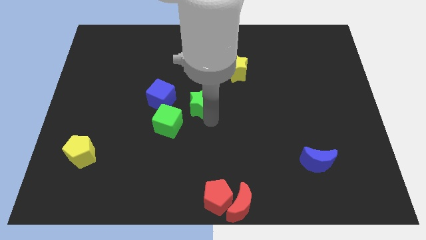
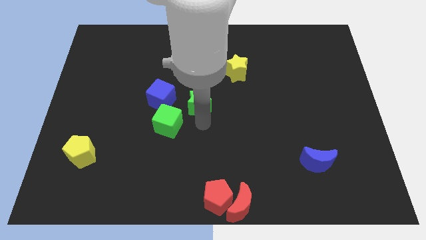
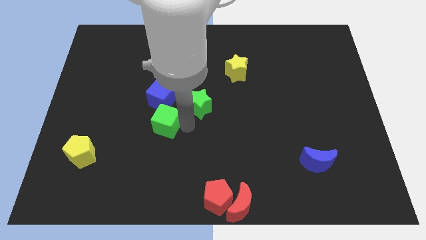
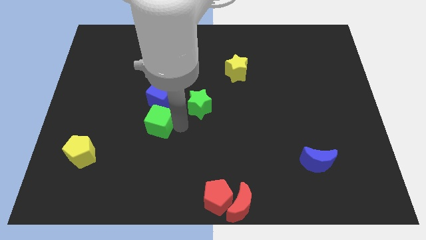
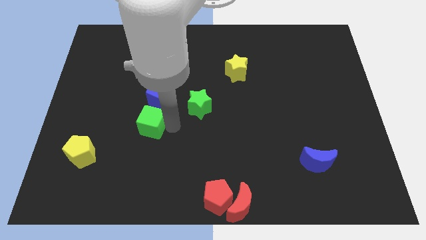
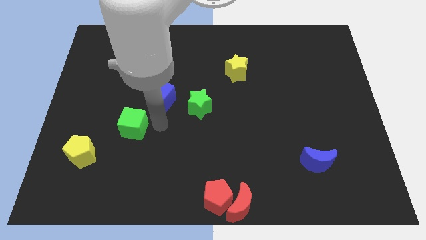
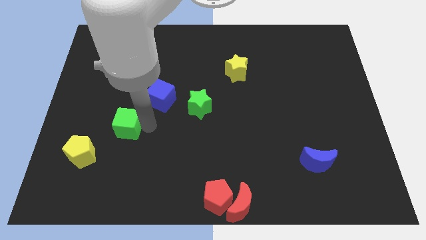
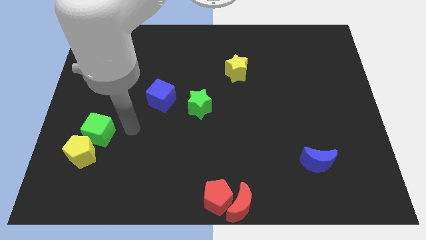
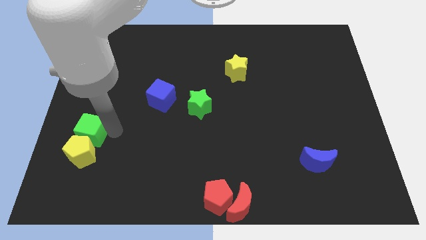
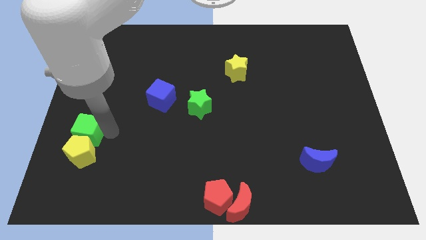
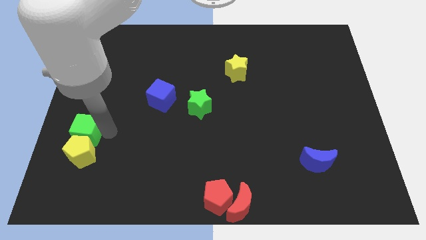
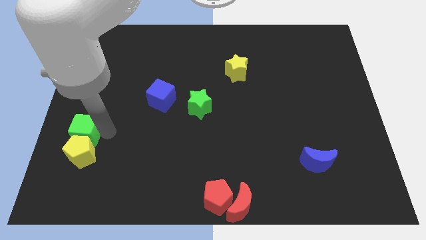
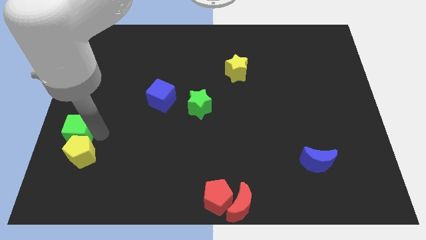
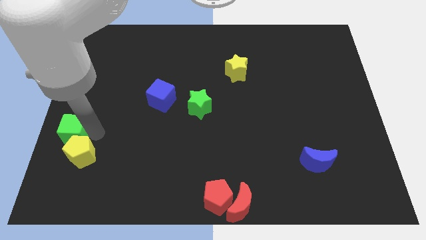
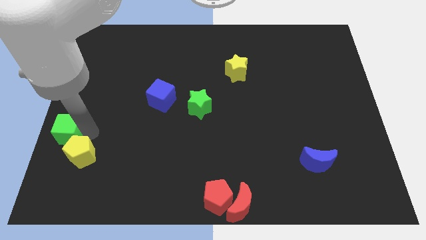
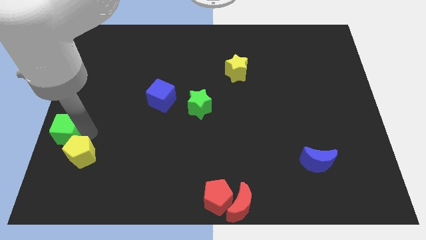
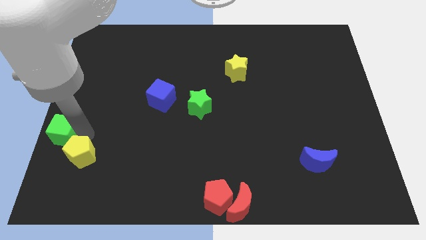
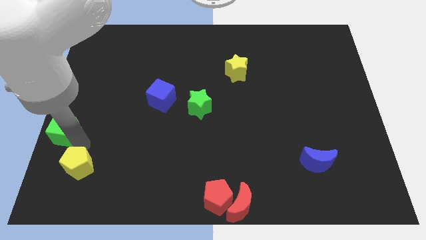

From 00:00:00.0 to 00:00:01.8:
push the green cube to the top left of the yellow pentagon

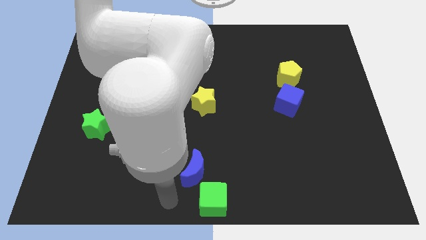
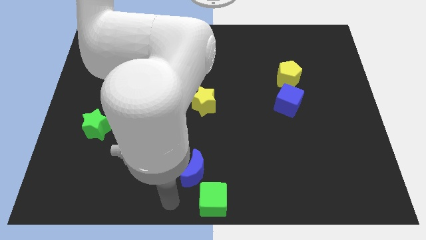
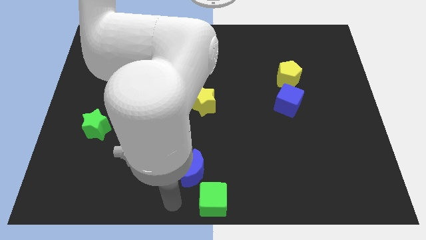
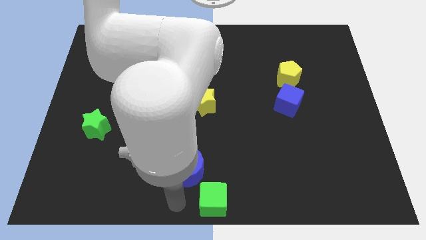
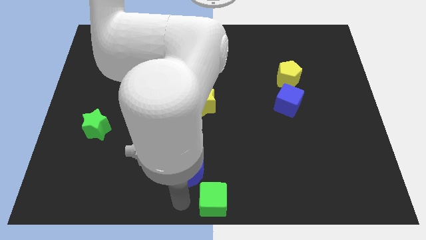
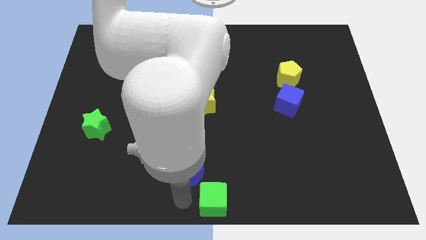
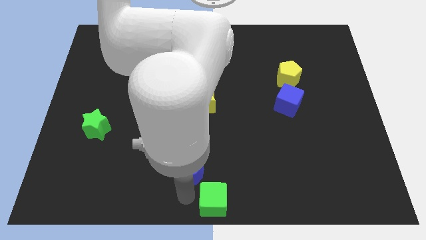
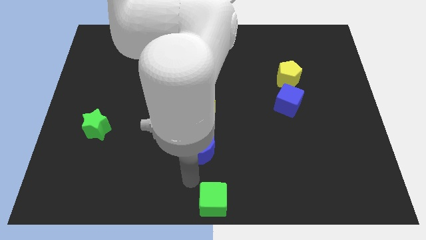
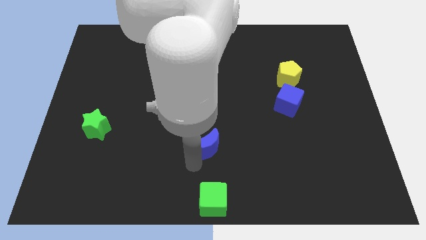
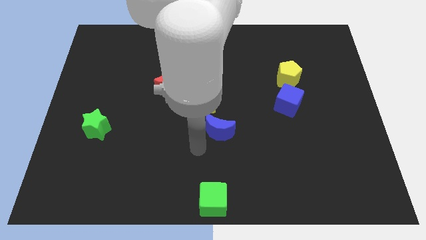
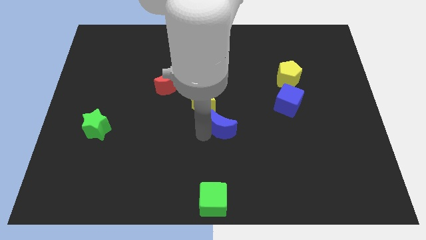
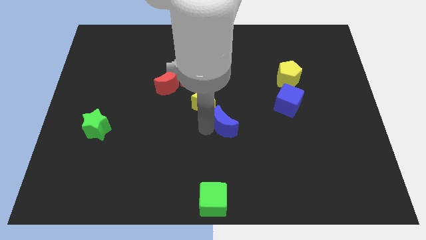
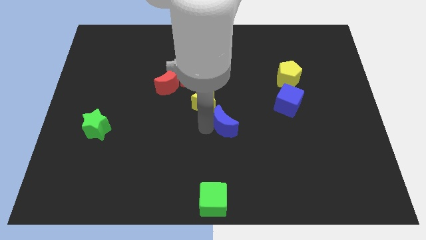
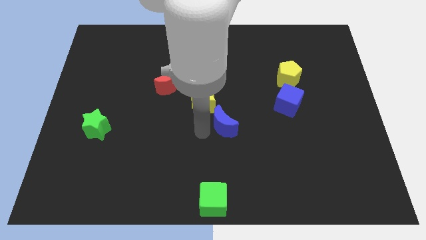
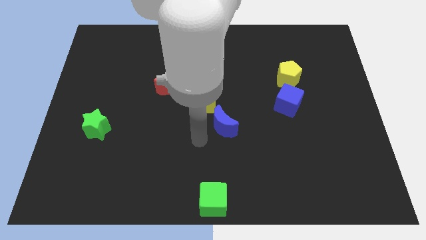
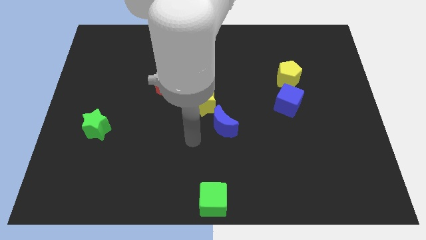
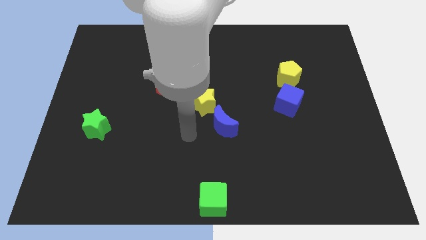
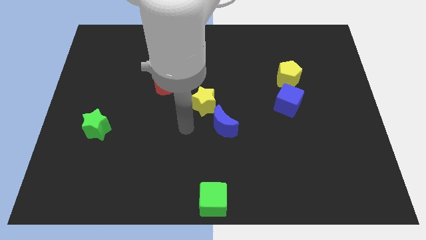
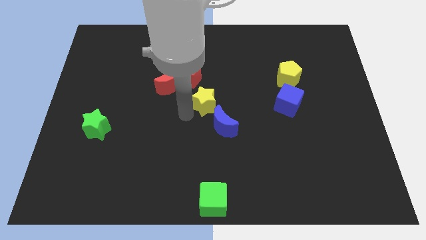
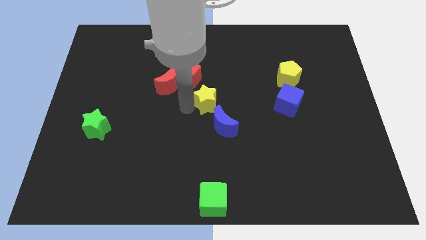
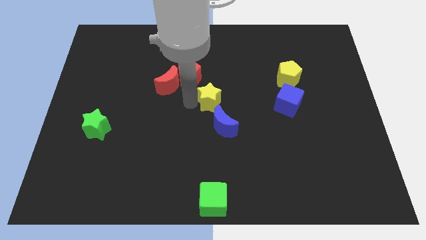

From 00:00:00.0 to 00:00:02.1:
move the blue moon diagonally to the yellow star

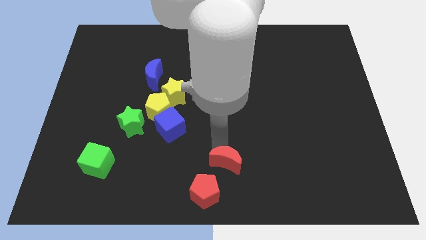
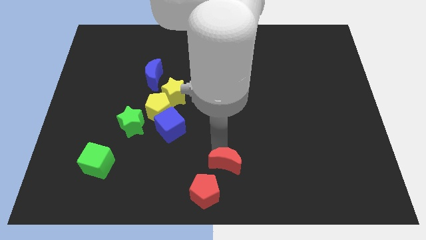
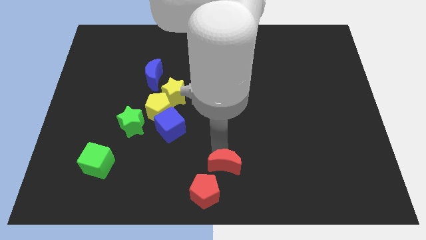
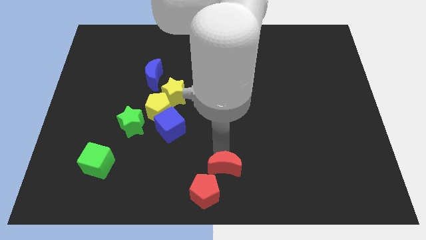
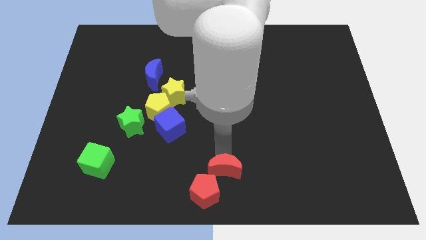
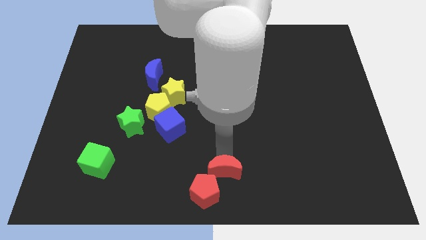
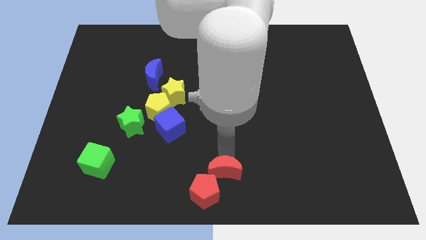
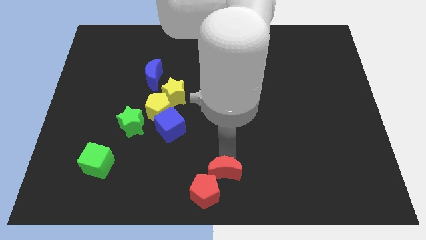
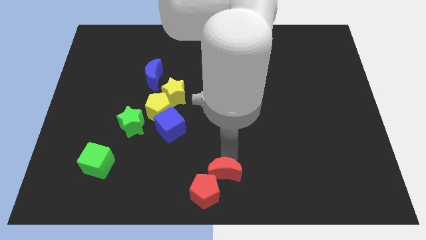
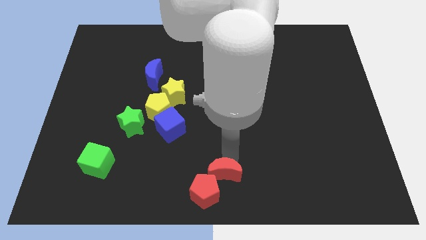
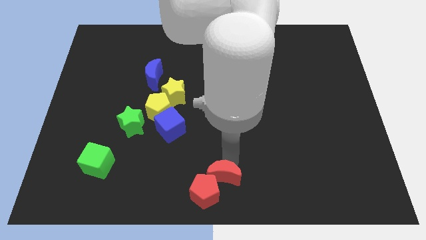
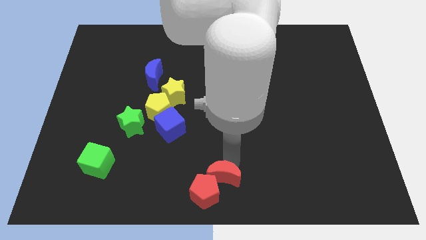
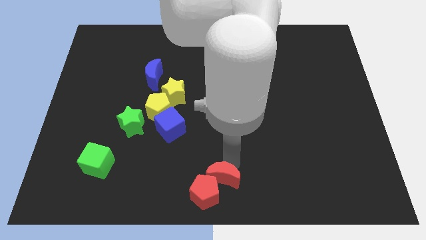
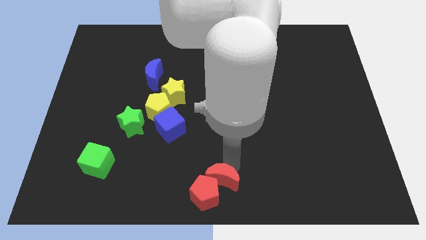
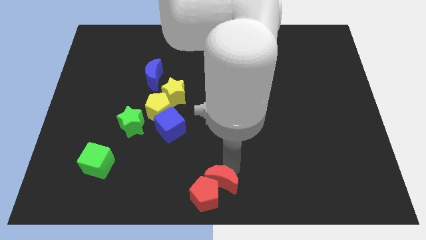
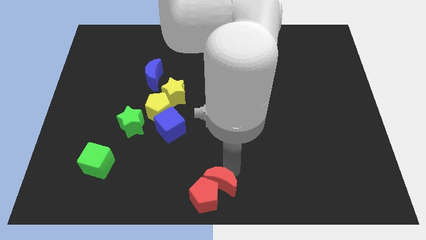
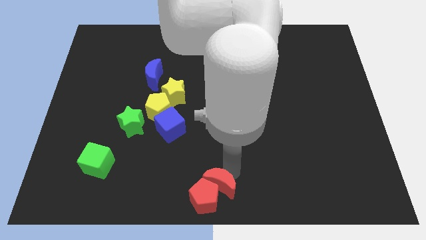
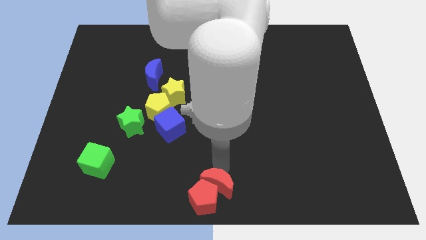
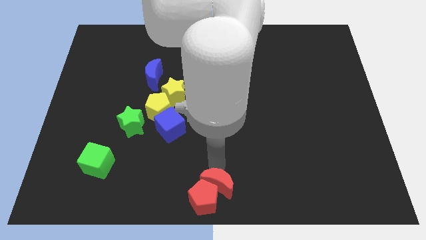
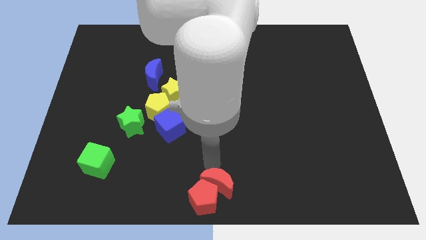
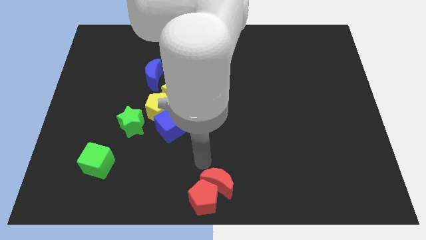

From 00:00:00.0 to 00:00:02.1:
push the red crescent in to the red pentagon

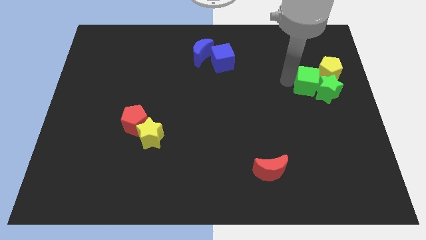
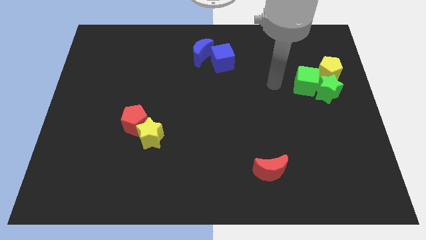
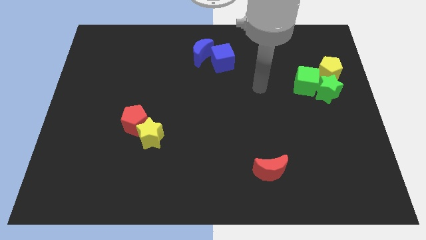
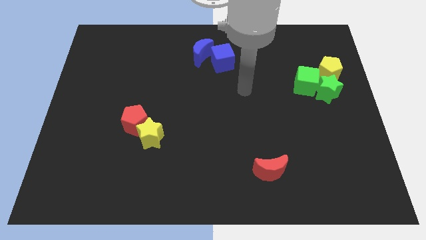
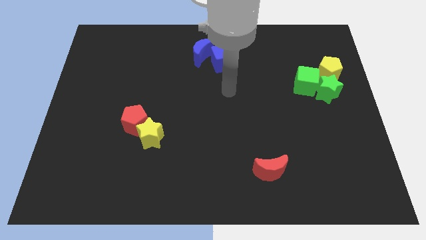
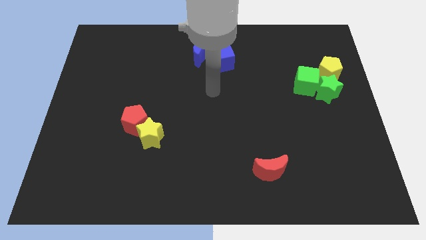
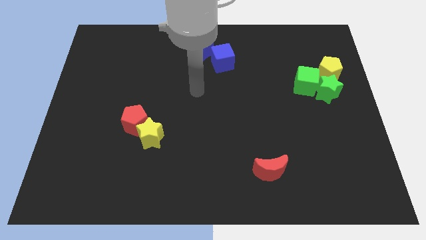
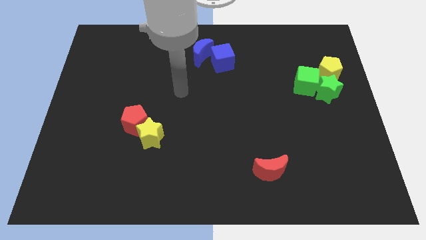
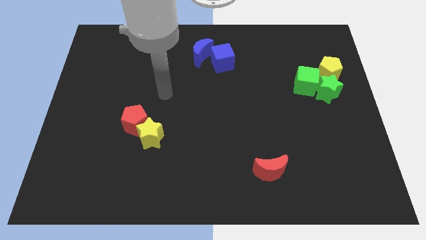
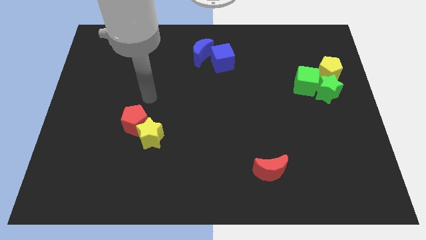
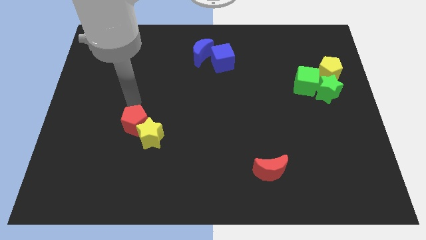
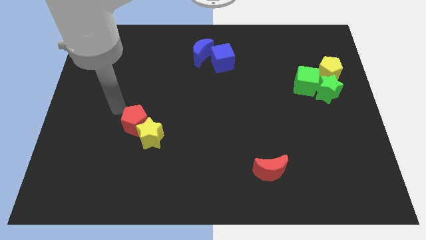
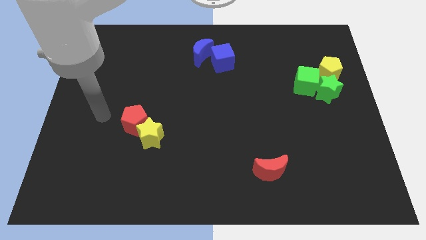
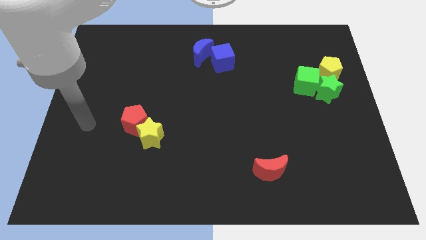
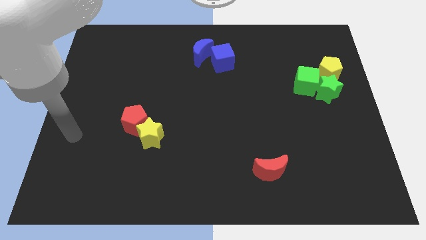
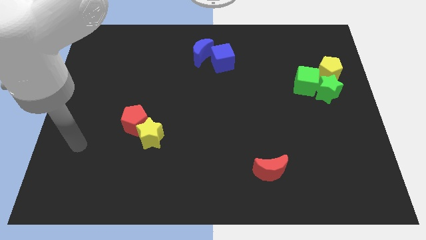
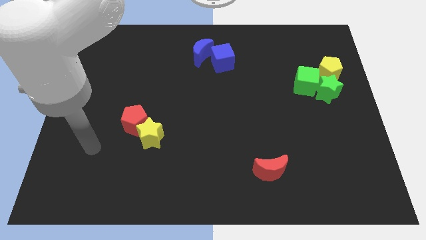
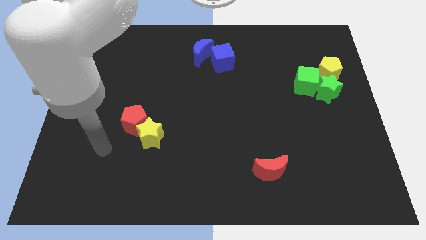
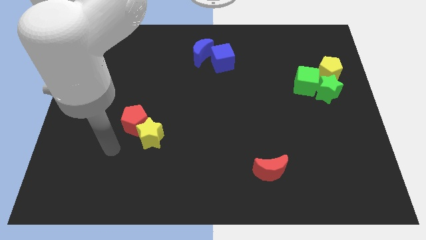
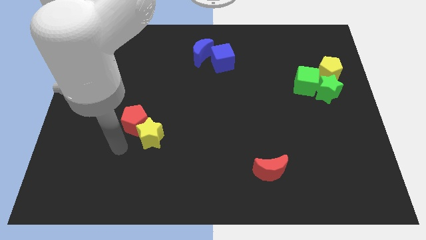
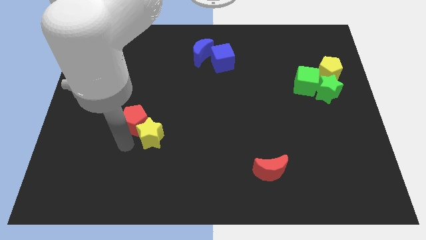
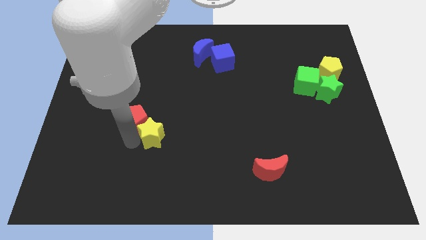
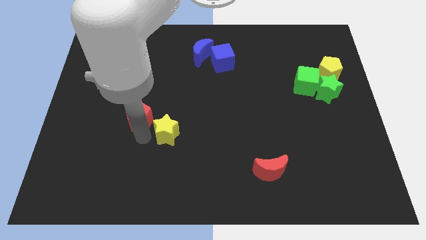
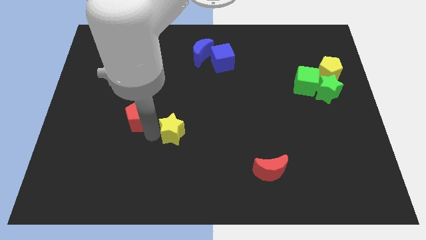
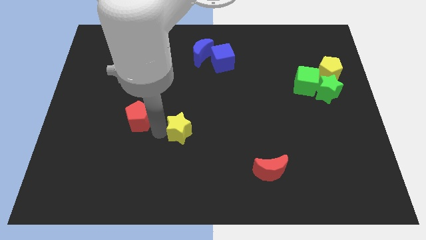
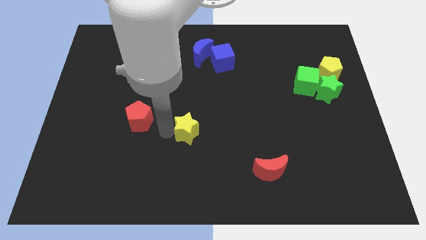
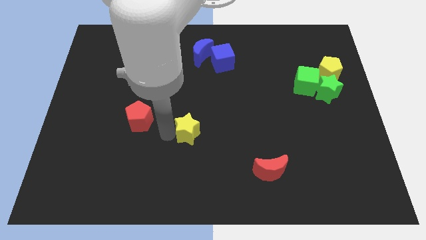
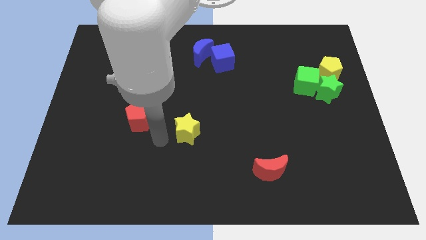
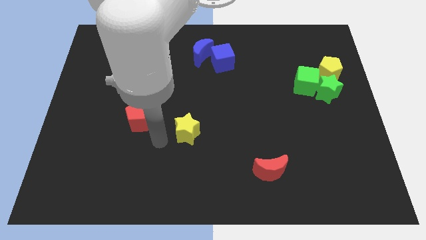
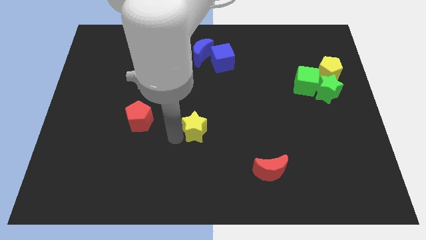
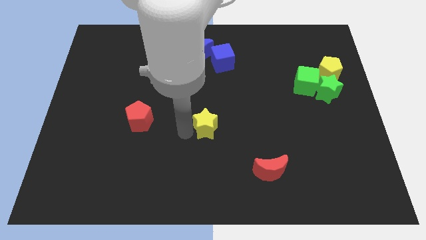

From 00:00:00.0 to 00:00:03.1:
separate the yellow star from the red pentagon
